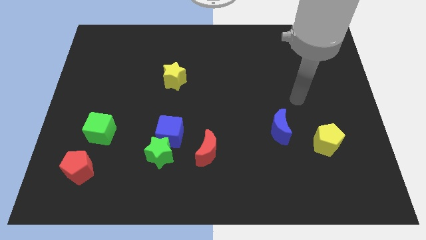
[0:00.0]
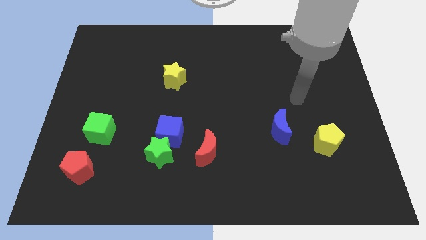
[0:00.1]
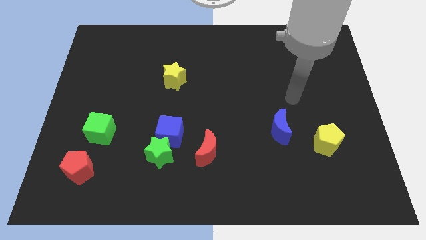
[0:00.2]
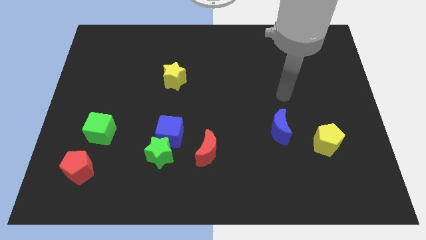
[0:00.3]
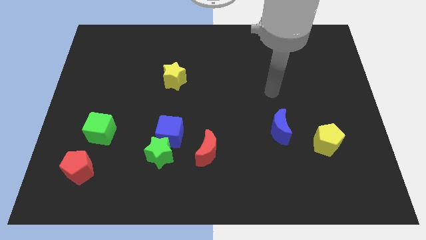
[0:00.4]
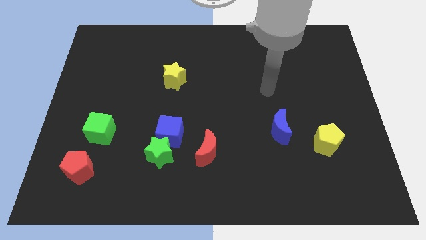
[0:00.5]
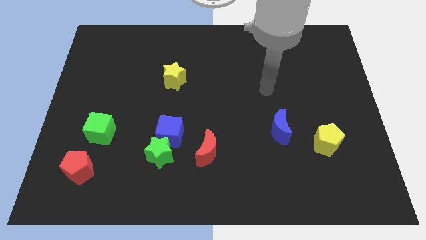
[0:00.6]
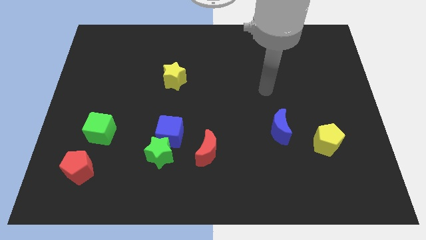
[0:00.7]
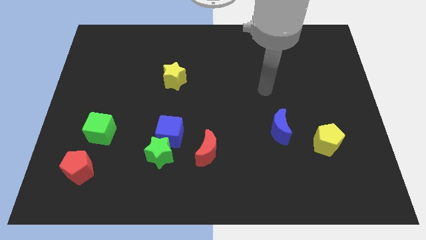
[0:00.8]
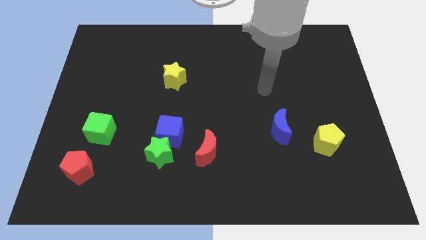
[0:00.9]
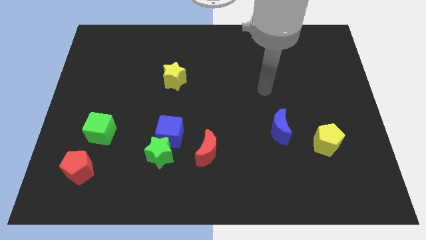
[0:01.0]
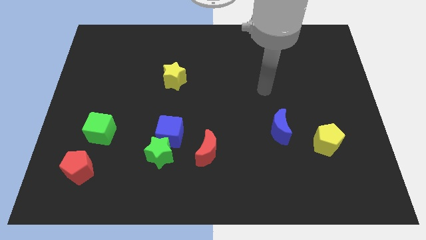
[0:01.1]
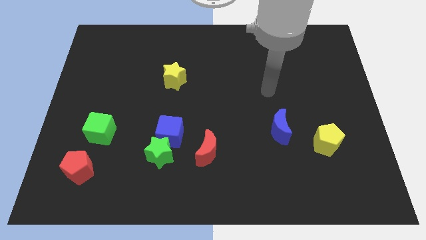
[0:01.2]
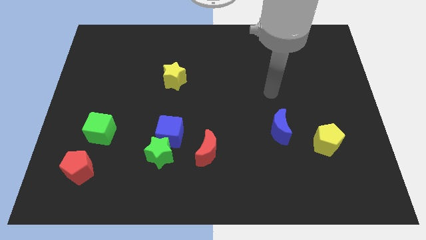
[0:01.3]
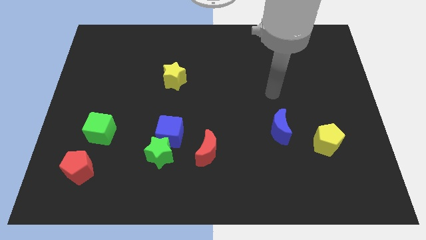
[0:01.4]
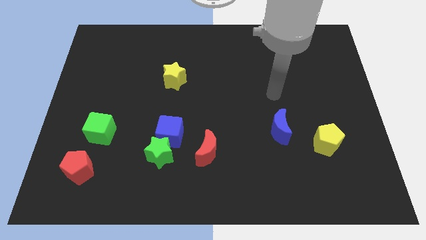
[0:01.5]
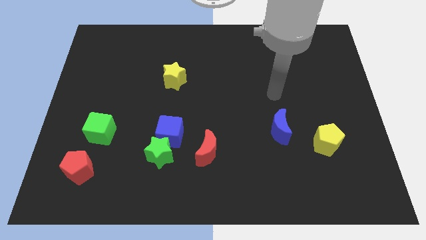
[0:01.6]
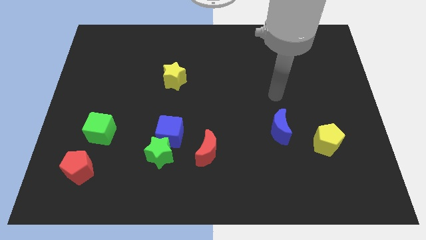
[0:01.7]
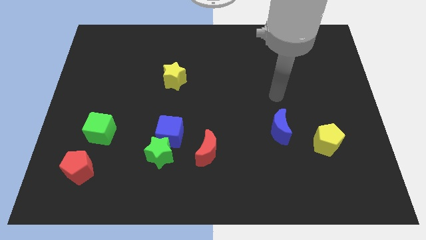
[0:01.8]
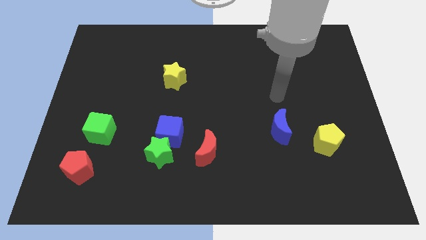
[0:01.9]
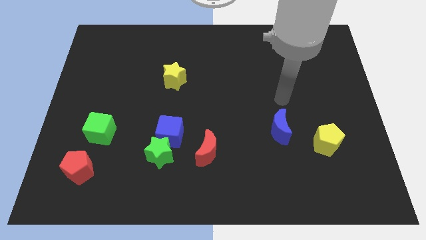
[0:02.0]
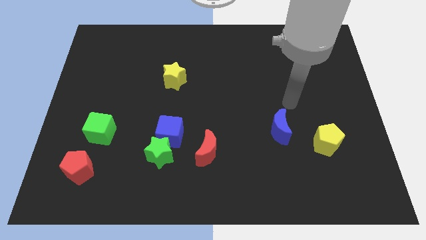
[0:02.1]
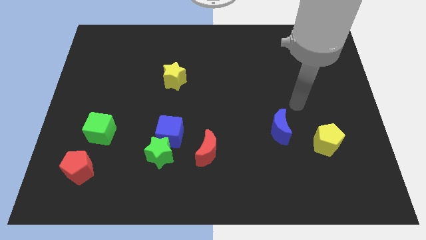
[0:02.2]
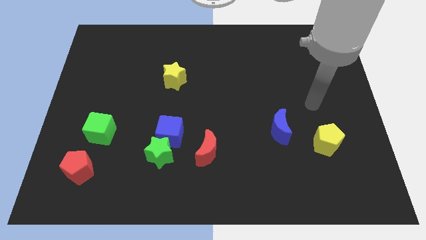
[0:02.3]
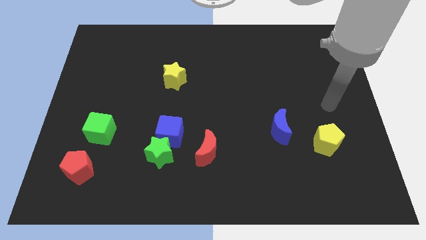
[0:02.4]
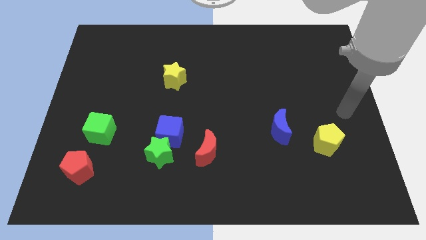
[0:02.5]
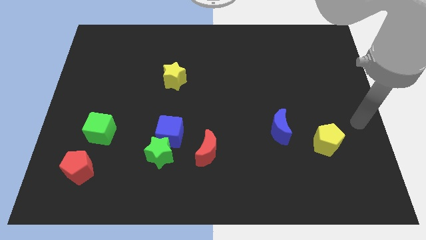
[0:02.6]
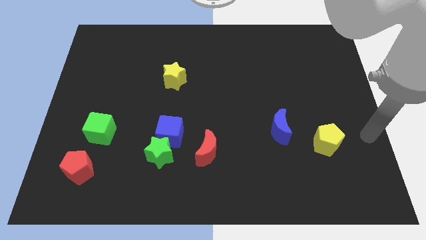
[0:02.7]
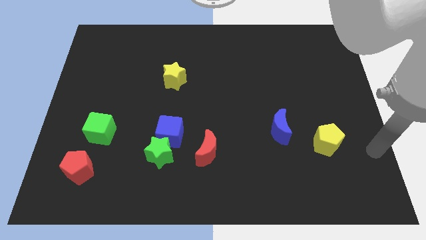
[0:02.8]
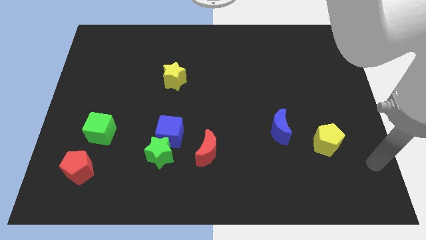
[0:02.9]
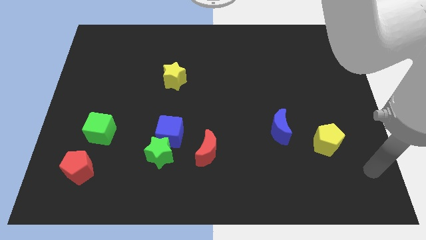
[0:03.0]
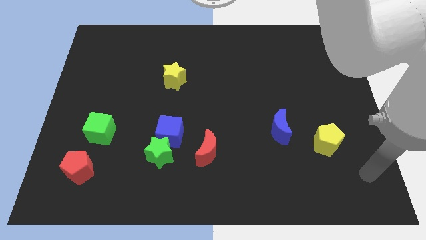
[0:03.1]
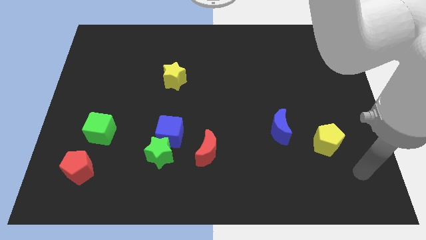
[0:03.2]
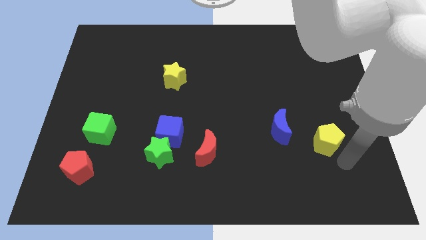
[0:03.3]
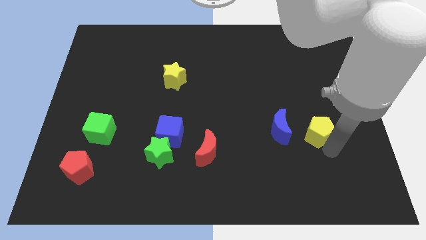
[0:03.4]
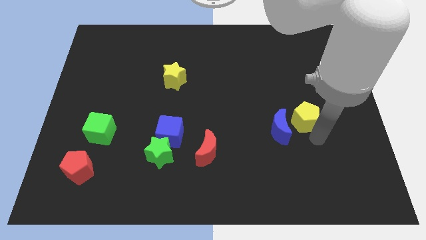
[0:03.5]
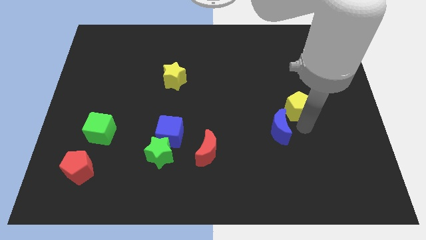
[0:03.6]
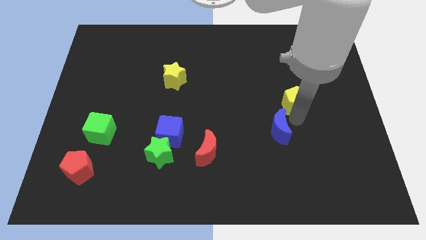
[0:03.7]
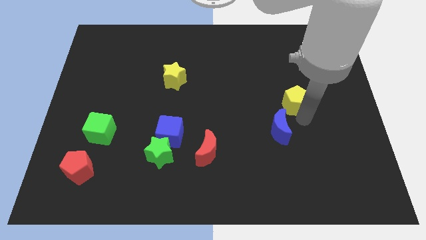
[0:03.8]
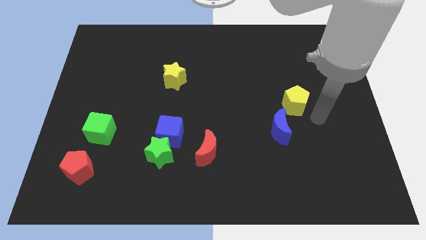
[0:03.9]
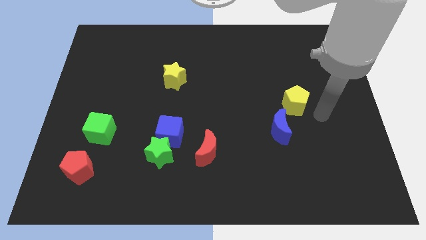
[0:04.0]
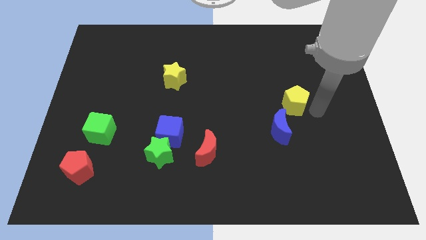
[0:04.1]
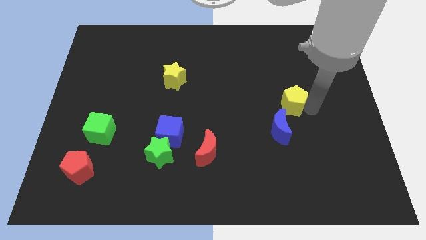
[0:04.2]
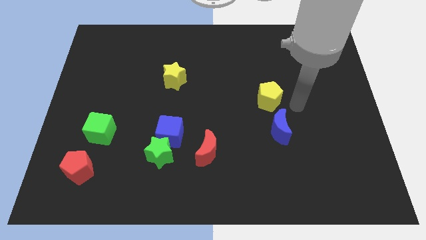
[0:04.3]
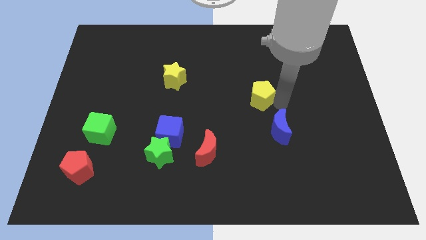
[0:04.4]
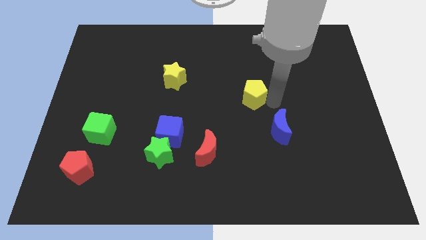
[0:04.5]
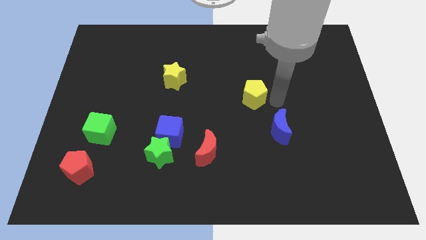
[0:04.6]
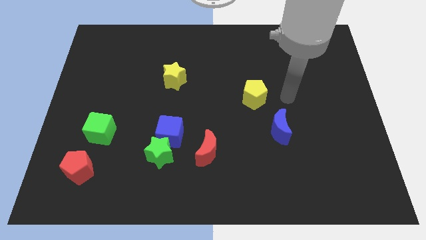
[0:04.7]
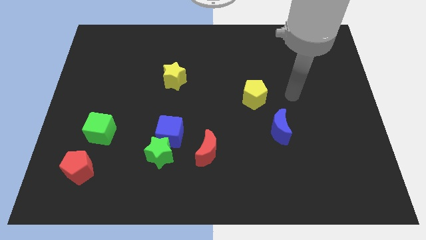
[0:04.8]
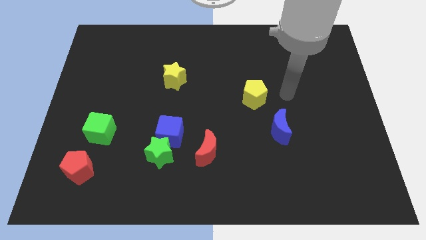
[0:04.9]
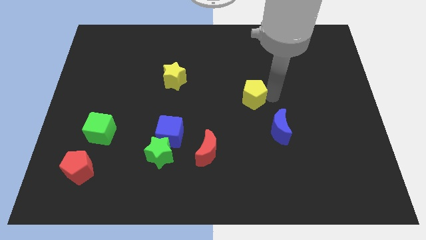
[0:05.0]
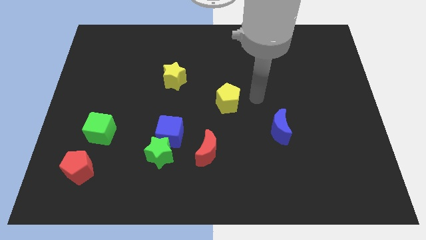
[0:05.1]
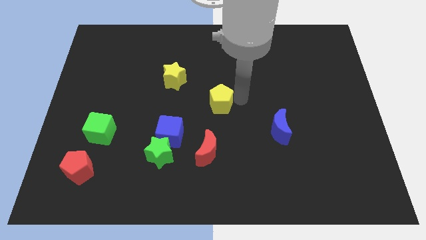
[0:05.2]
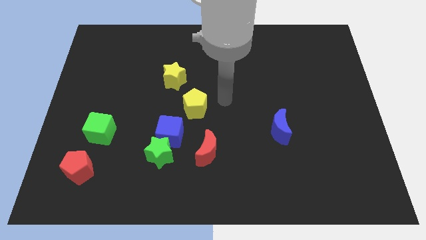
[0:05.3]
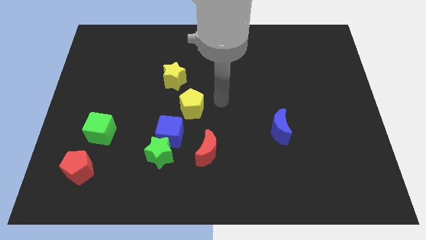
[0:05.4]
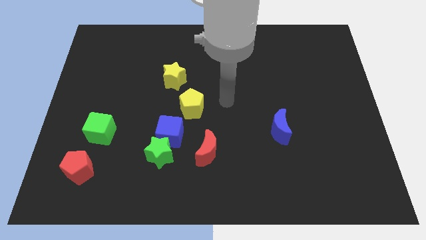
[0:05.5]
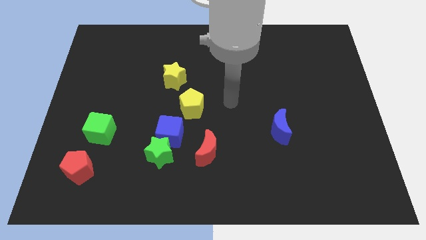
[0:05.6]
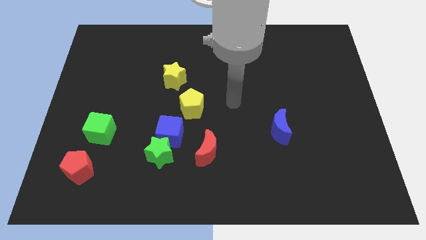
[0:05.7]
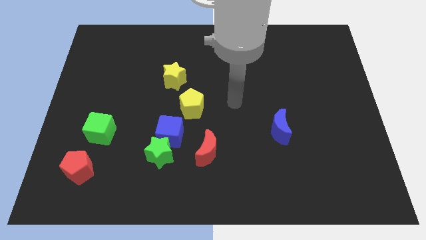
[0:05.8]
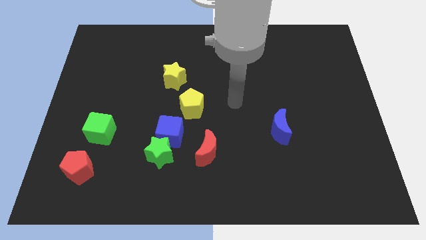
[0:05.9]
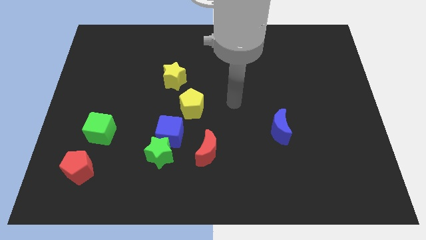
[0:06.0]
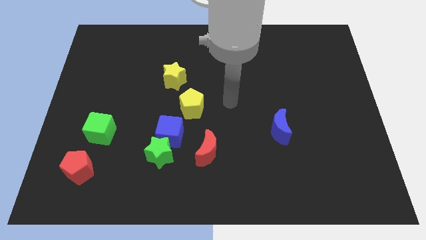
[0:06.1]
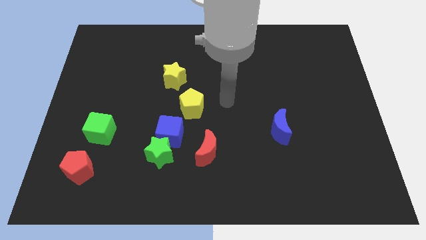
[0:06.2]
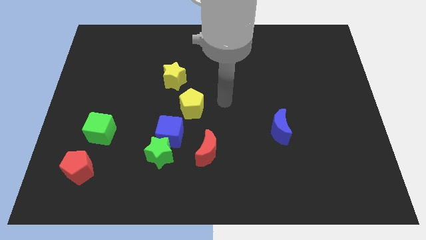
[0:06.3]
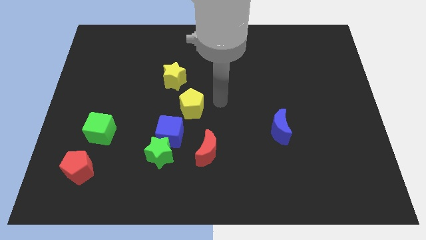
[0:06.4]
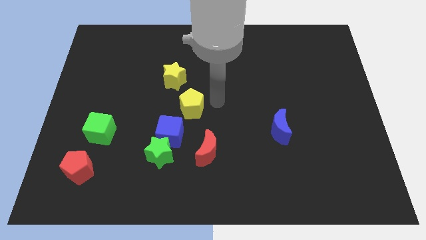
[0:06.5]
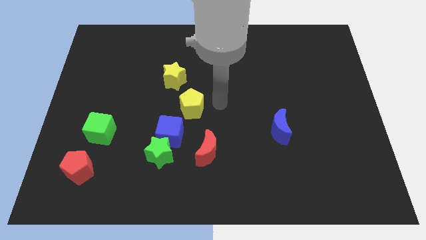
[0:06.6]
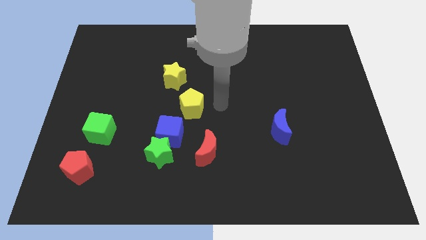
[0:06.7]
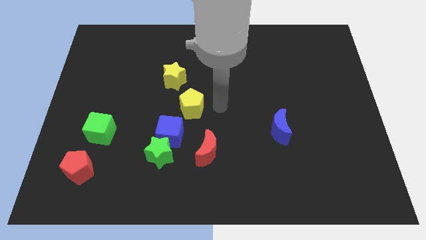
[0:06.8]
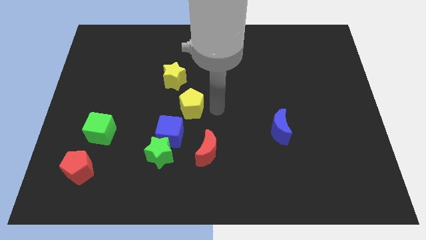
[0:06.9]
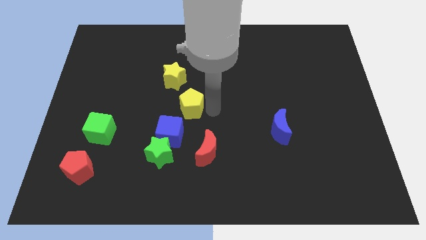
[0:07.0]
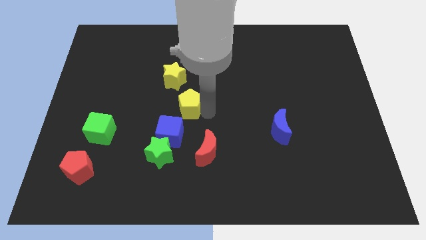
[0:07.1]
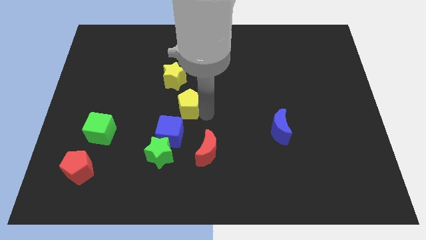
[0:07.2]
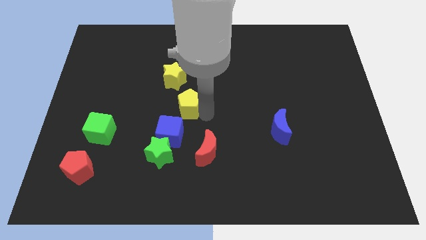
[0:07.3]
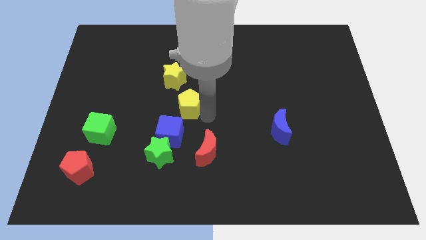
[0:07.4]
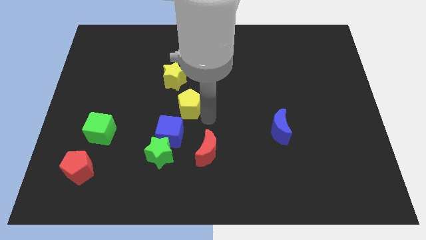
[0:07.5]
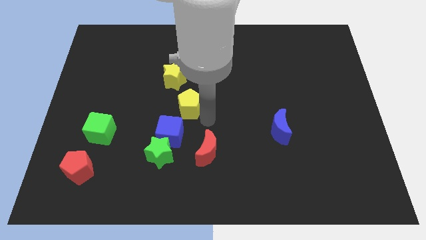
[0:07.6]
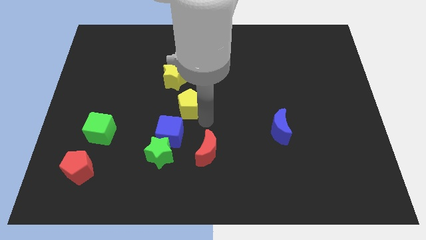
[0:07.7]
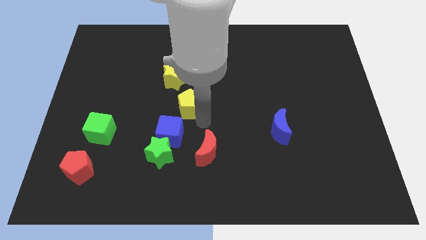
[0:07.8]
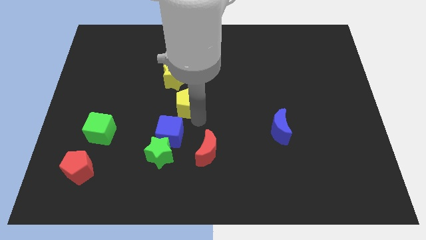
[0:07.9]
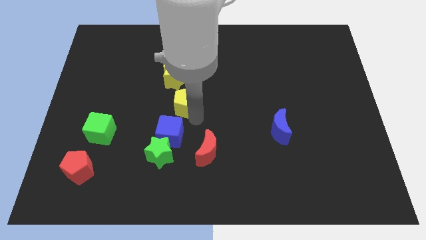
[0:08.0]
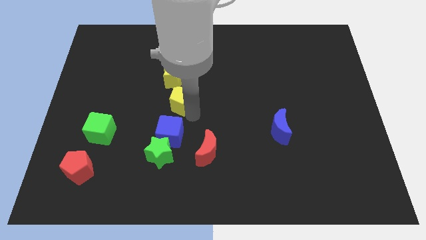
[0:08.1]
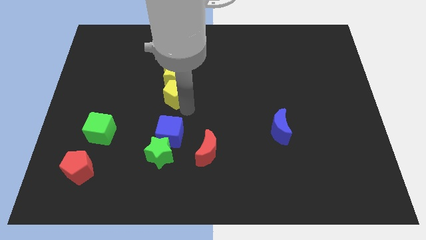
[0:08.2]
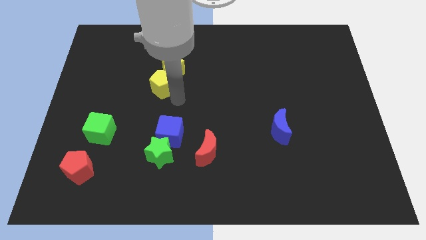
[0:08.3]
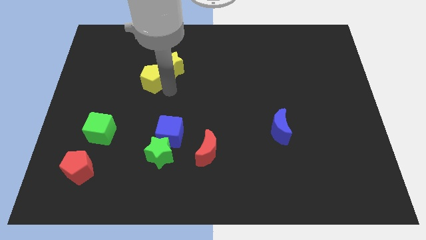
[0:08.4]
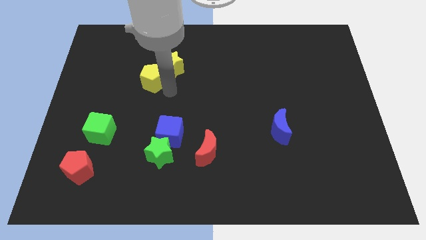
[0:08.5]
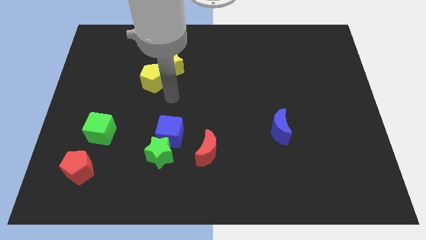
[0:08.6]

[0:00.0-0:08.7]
push the yellow pentagon towards the top left corner of the board

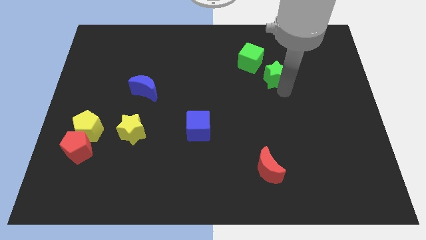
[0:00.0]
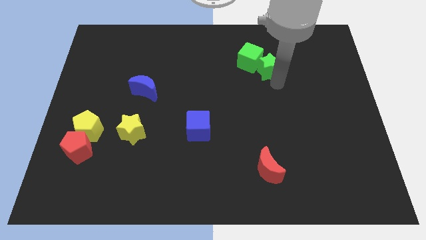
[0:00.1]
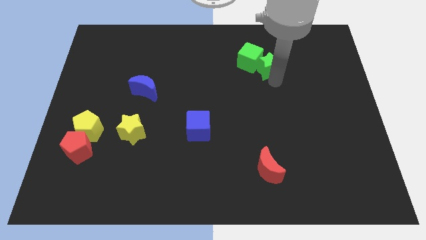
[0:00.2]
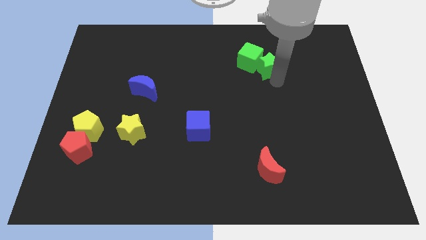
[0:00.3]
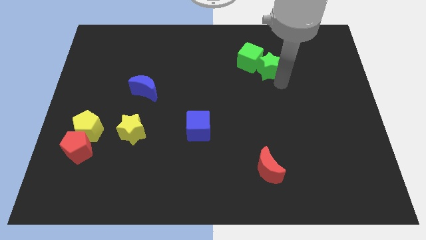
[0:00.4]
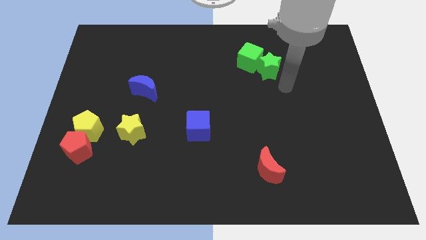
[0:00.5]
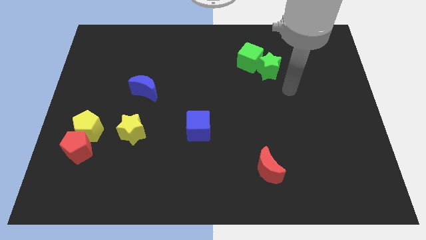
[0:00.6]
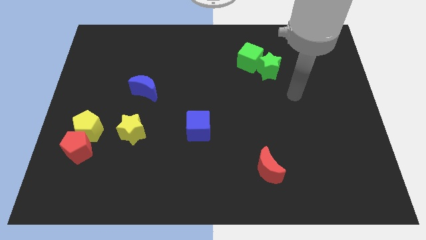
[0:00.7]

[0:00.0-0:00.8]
push the green star into the green cube diagonally from the left bottom
